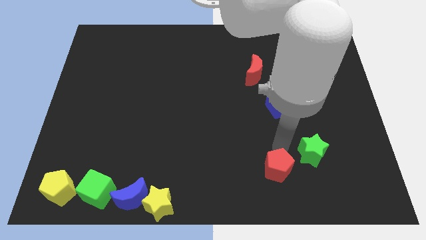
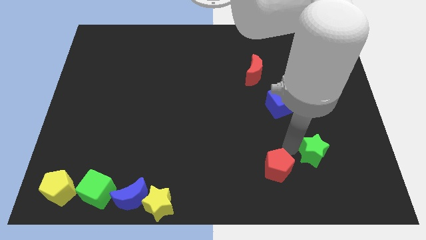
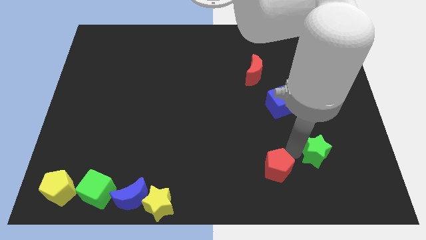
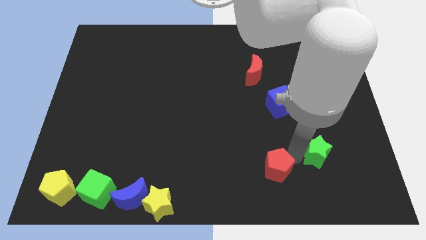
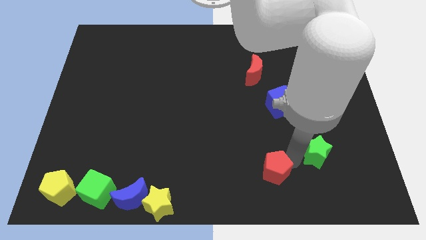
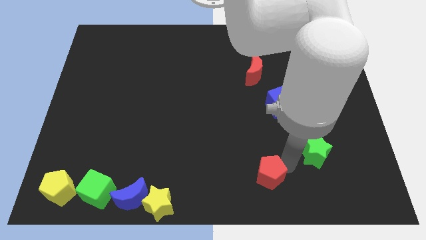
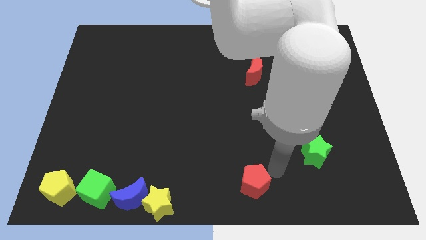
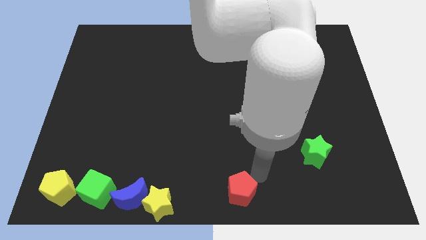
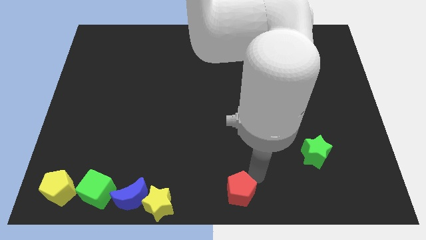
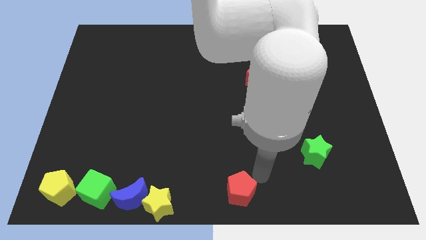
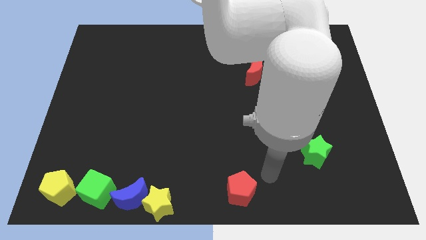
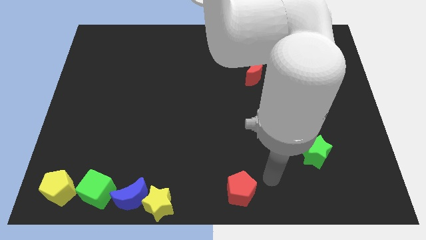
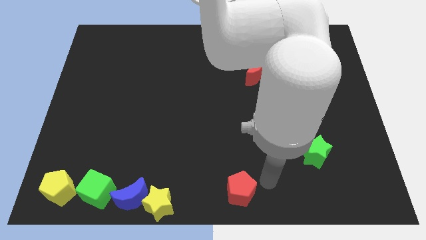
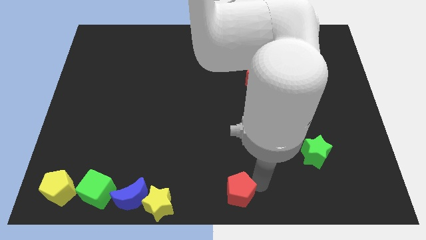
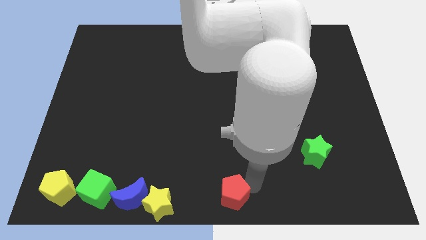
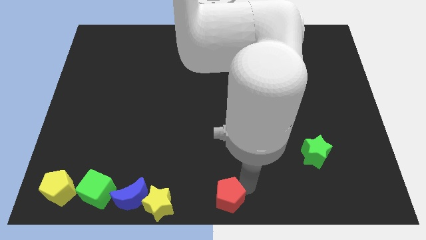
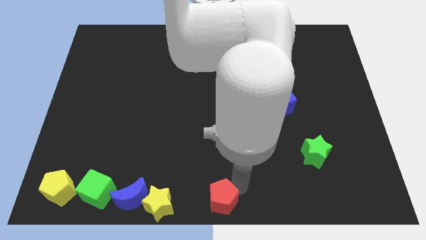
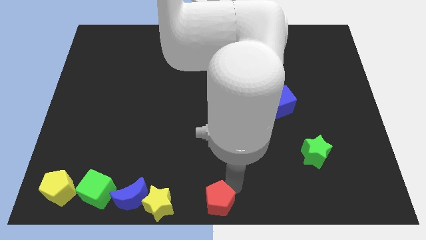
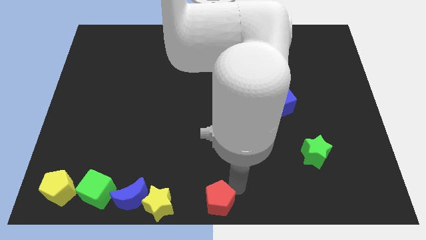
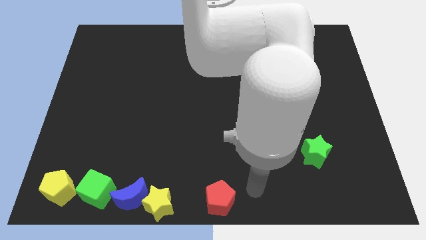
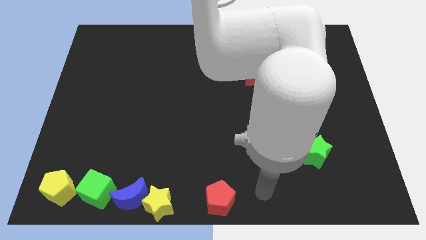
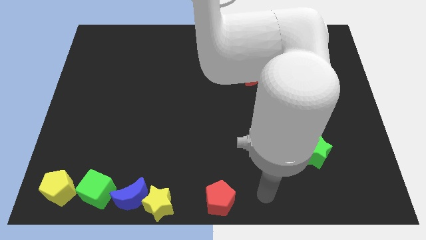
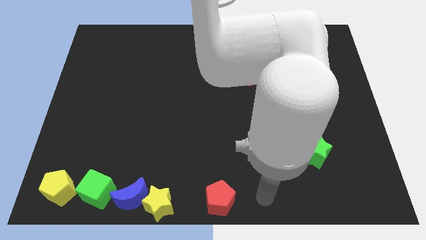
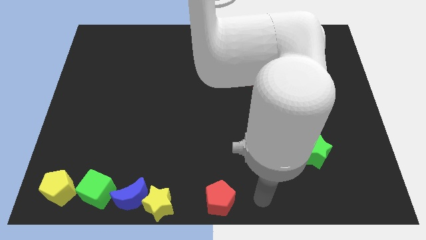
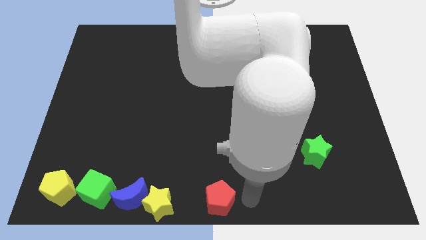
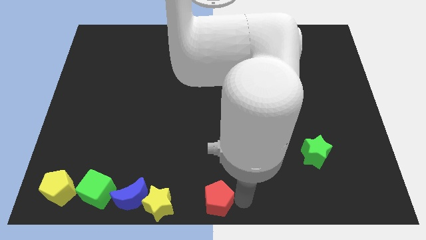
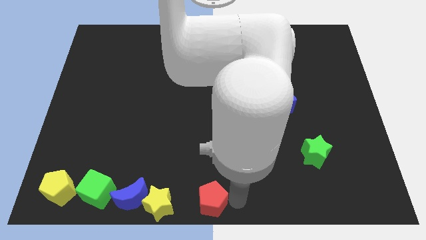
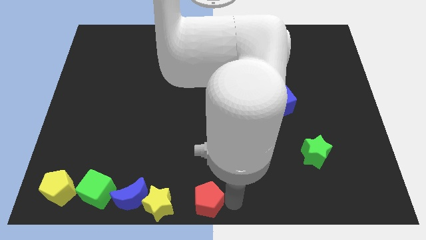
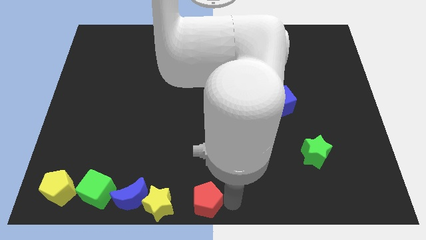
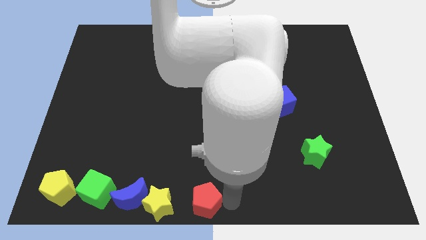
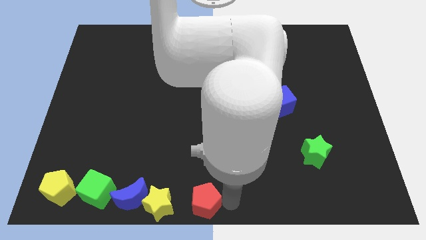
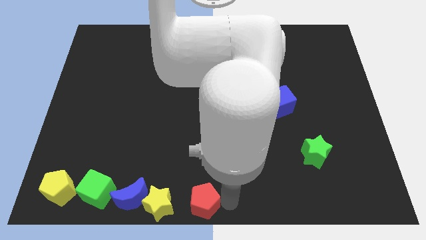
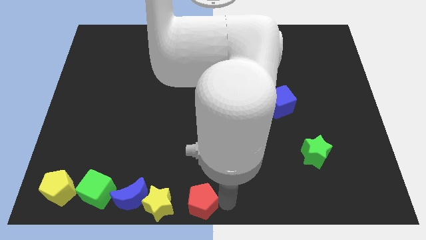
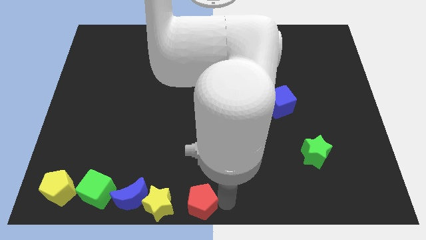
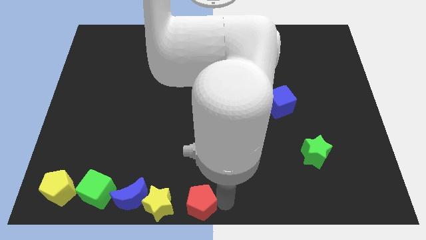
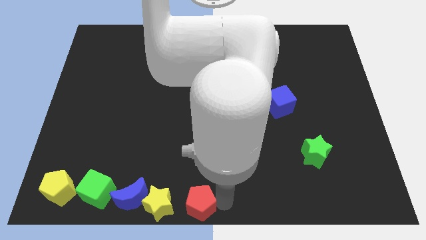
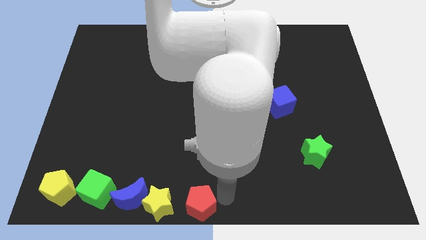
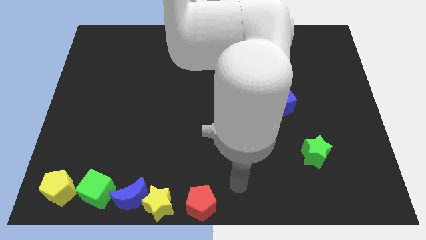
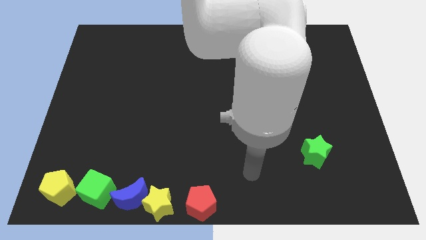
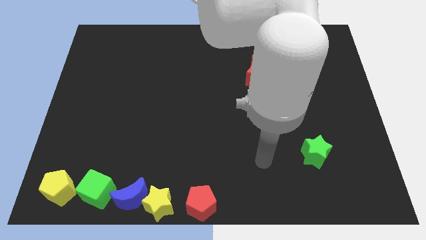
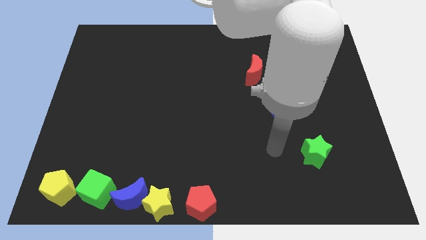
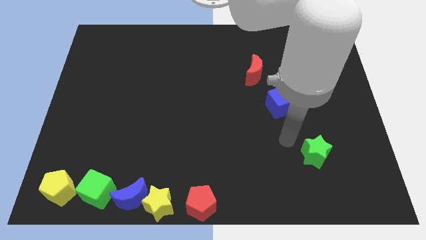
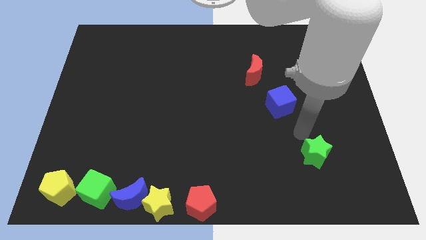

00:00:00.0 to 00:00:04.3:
place the red pentagon to the right of the yellow star

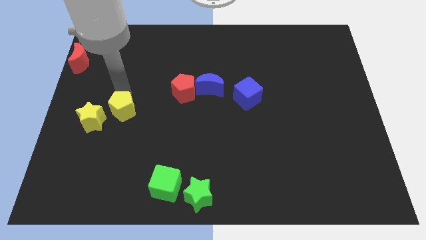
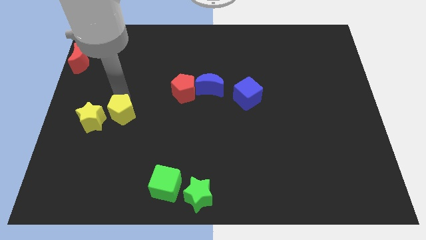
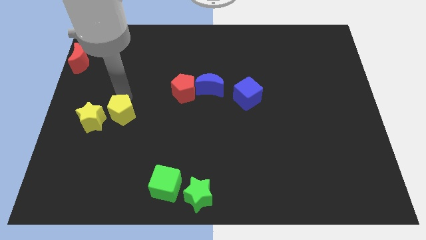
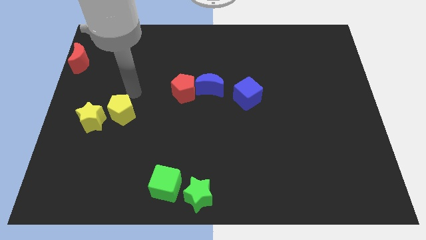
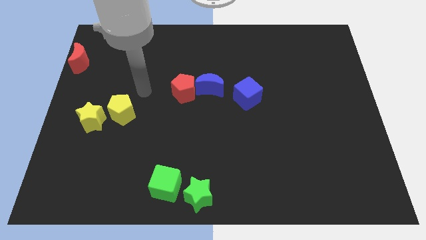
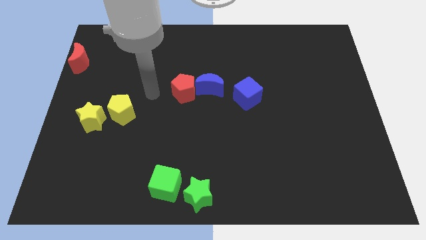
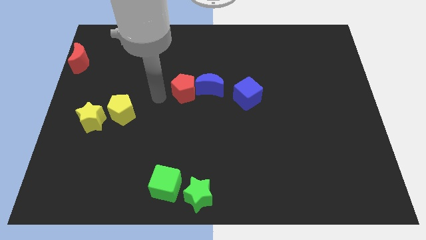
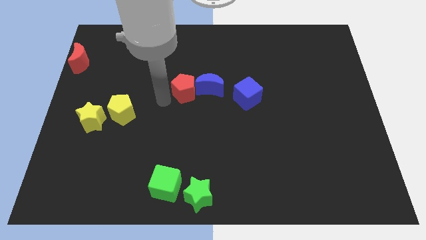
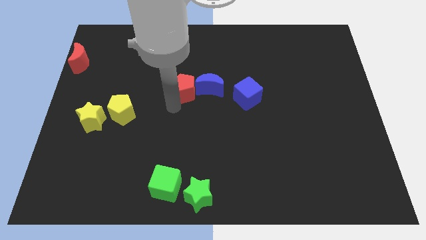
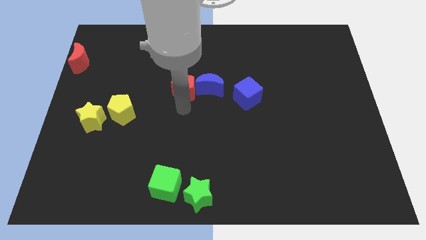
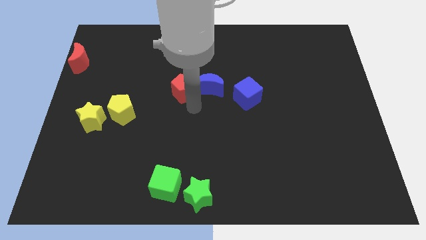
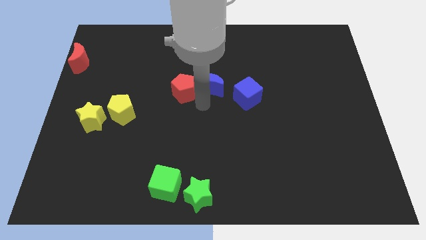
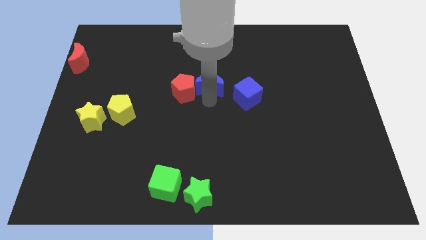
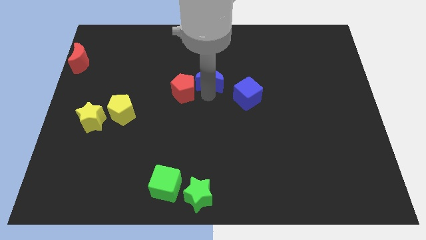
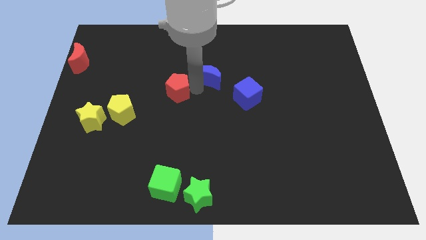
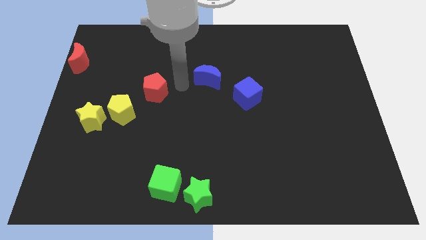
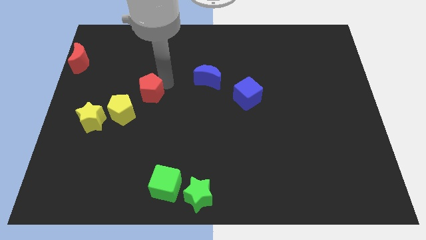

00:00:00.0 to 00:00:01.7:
push red pentagon towards yellow pentagon

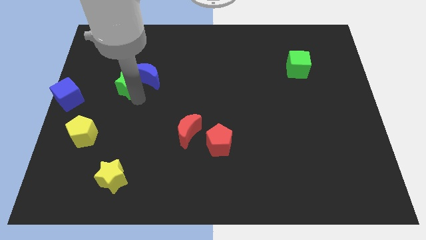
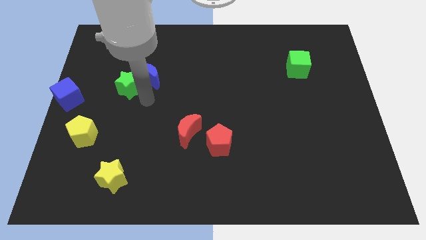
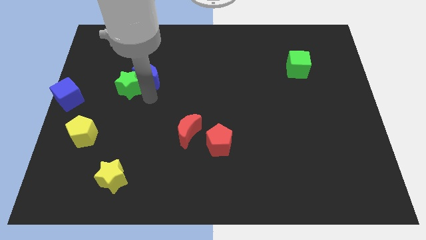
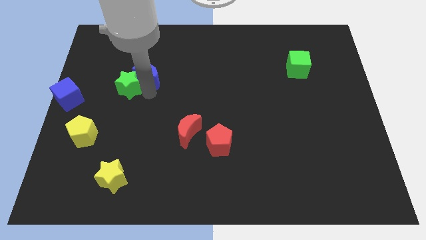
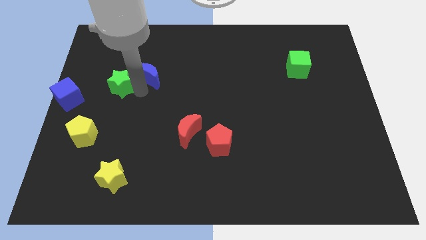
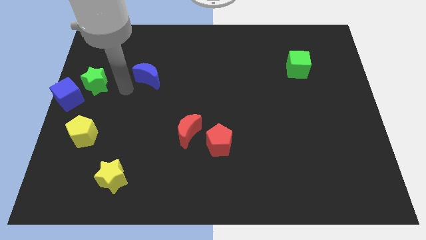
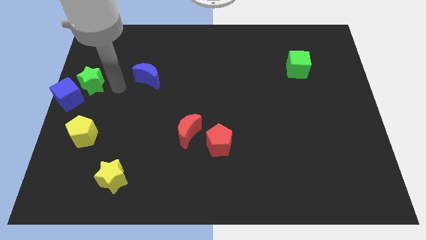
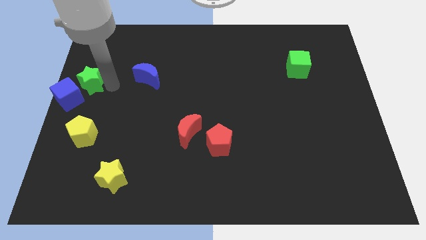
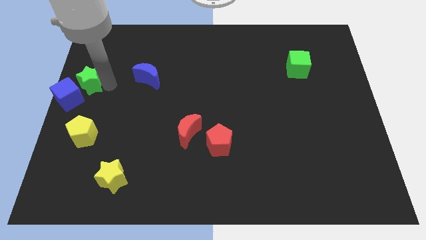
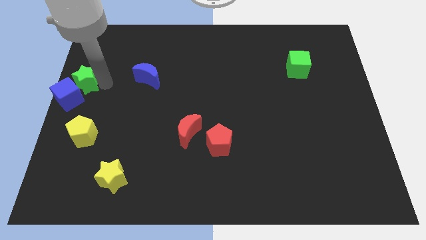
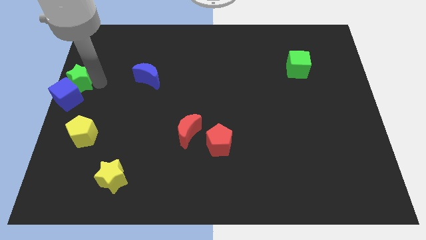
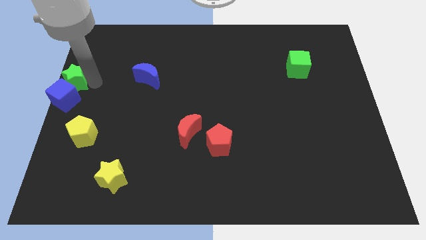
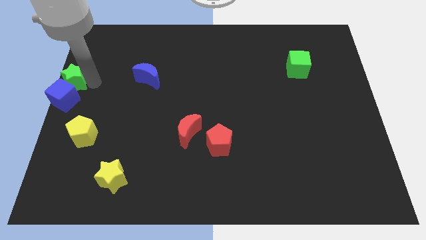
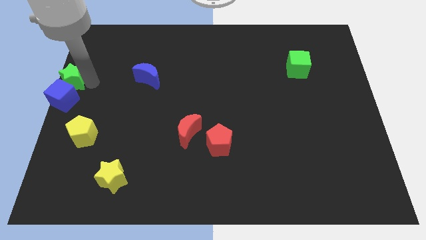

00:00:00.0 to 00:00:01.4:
move the green star into the top side of the blue cube

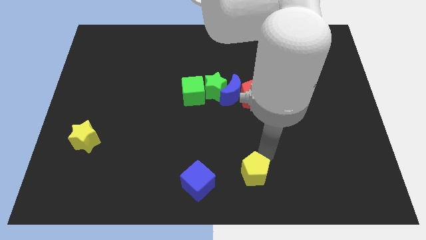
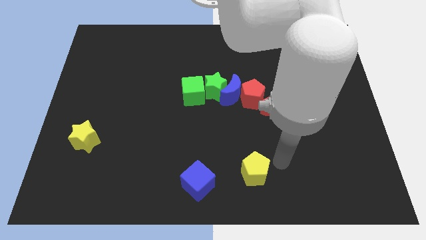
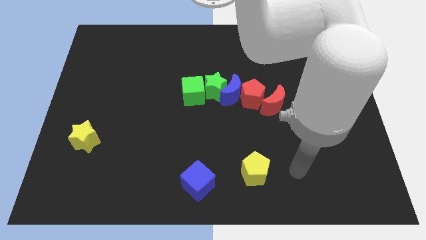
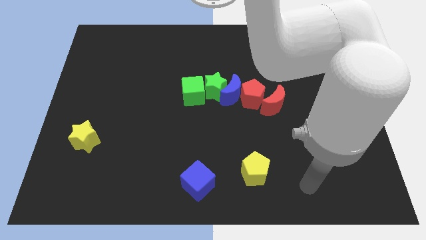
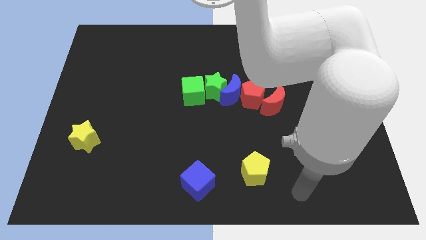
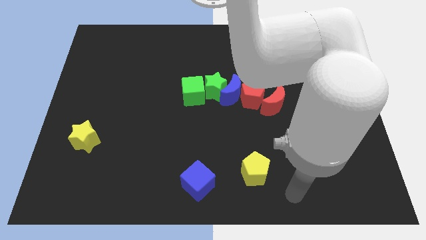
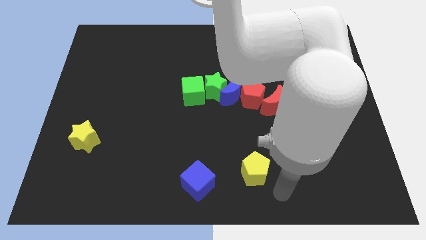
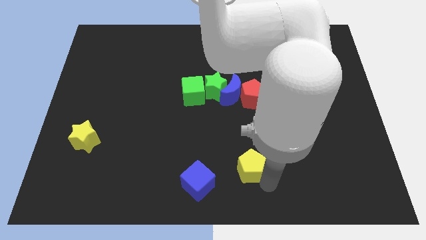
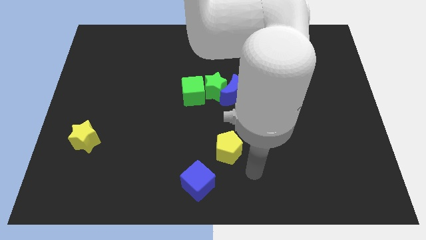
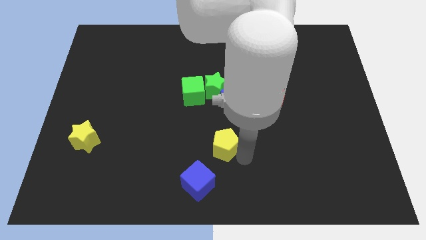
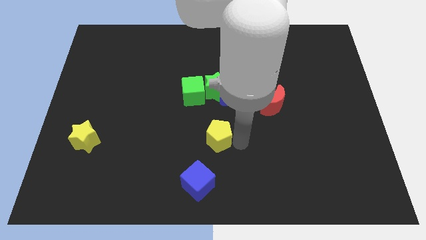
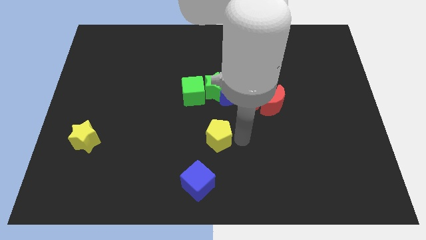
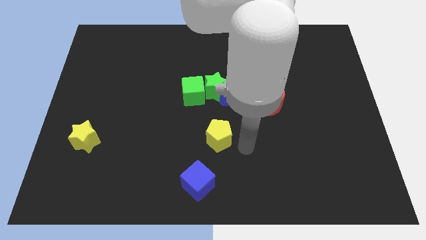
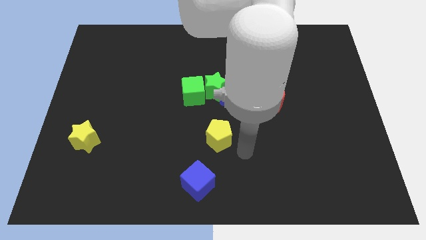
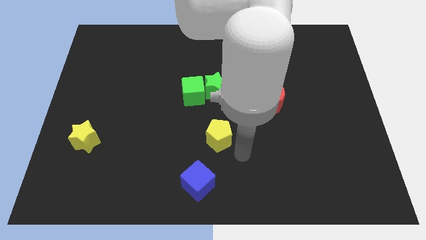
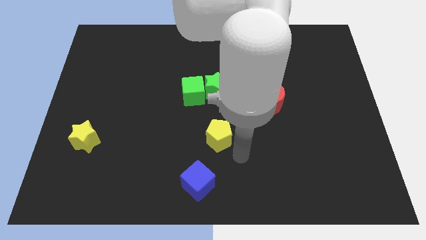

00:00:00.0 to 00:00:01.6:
move the yellow pentagon between the blue cube and blue moon
